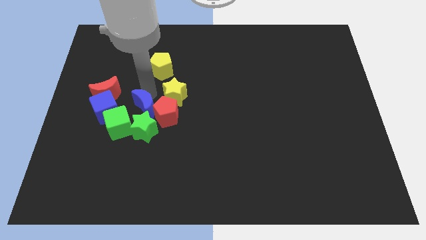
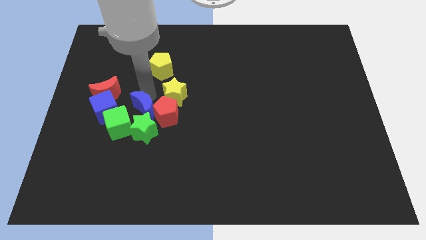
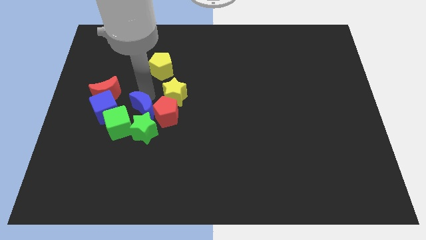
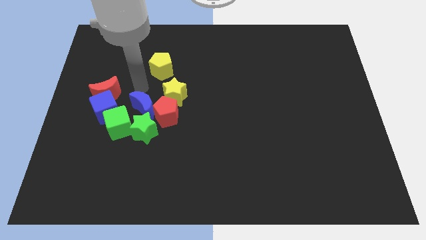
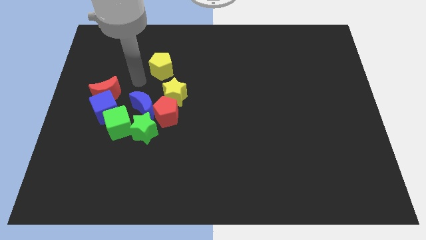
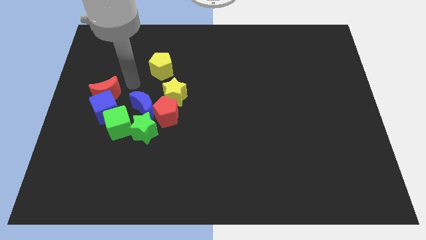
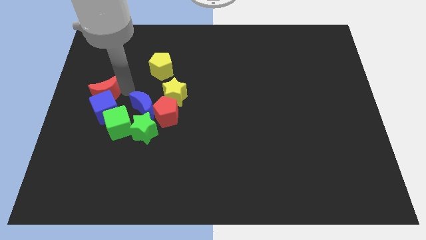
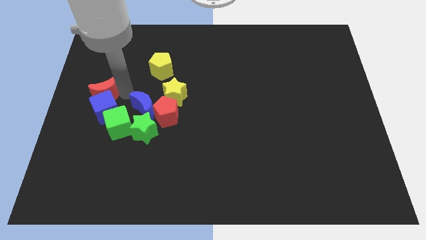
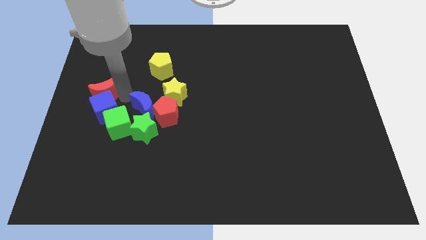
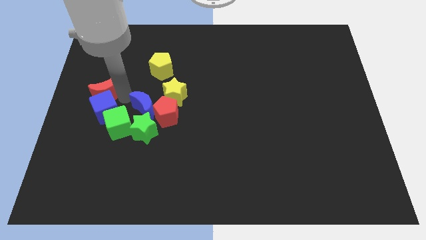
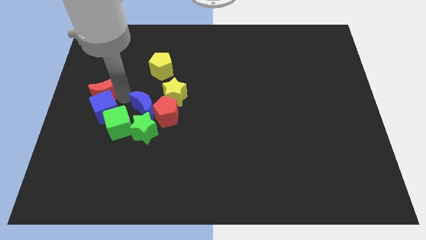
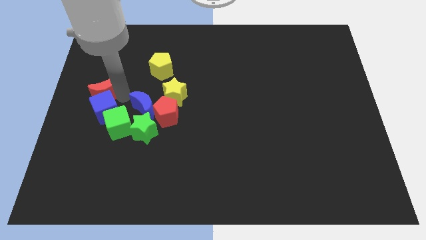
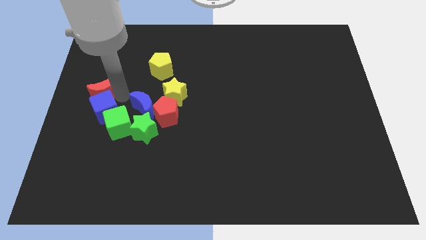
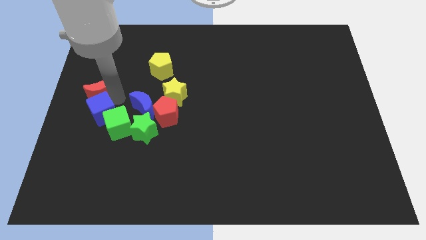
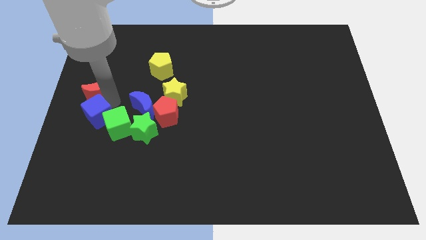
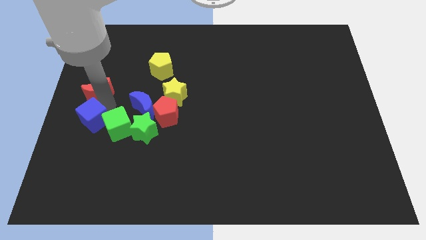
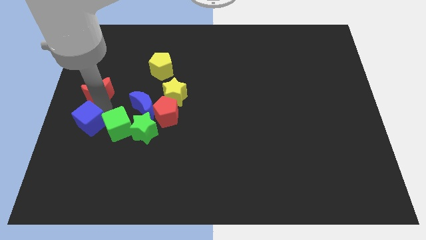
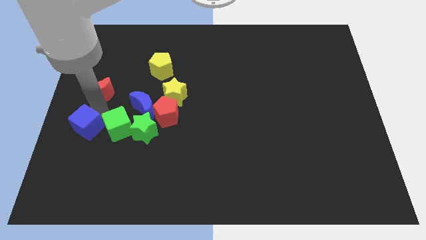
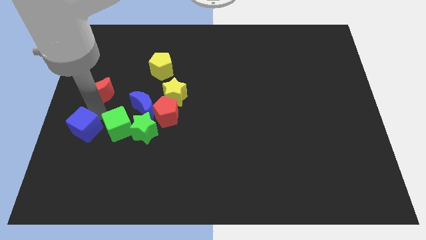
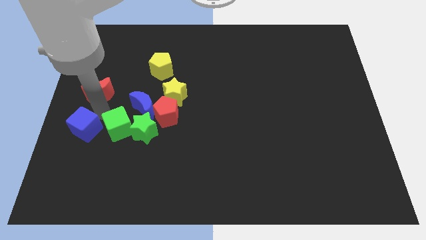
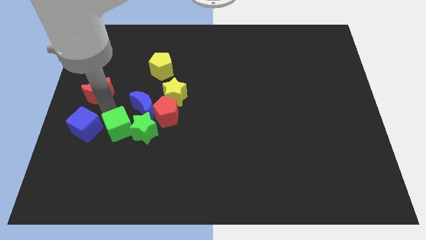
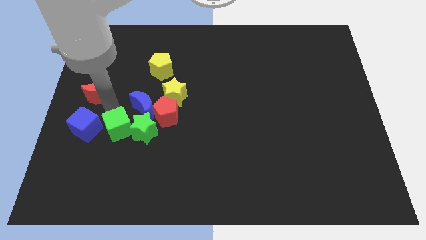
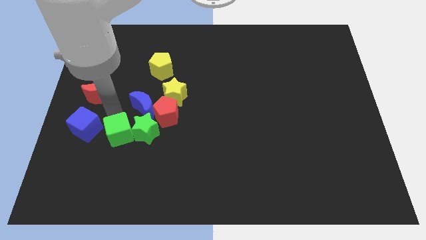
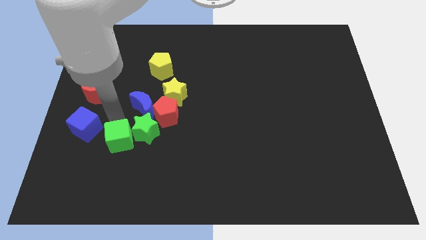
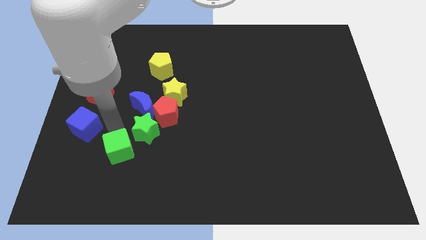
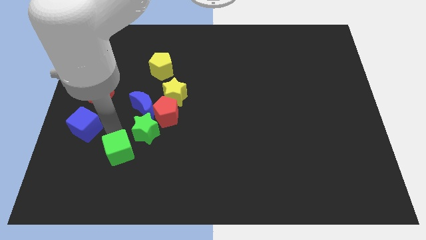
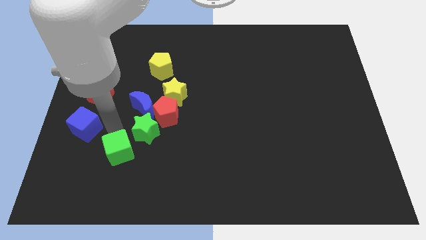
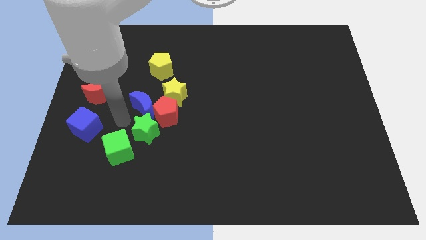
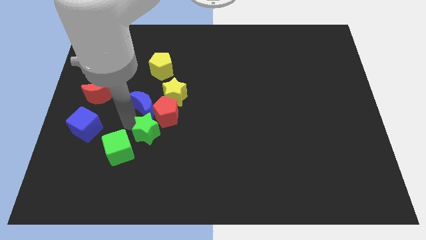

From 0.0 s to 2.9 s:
separate the blocks from each other

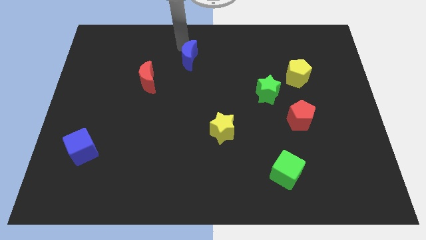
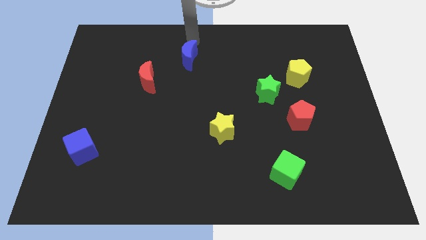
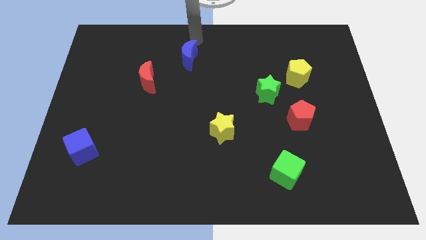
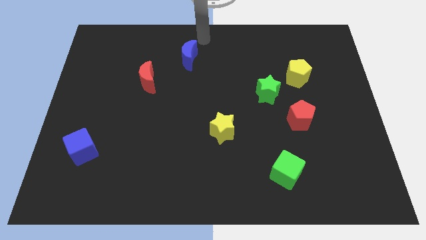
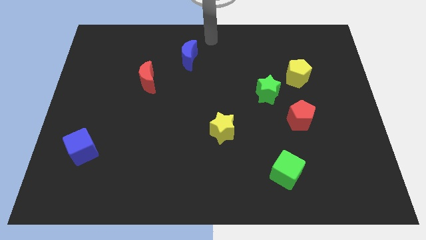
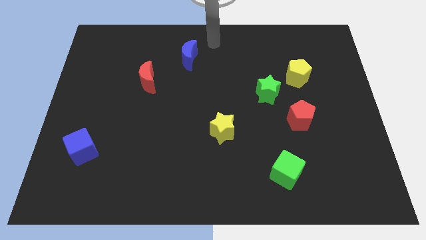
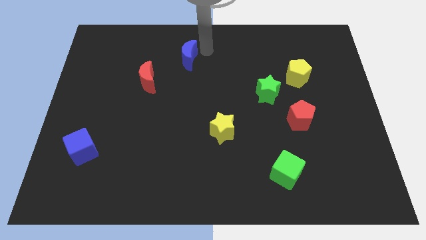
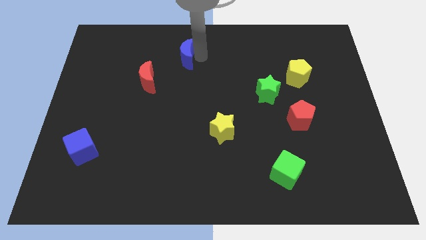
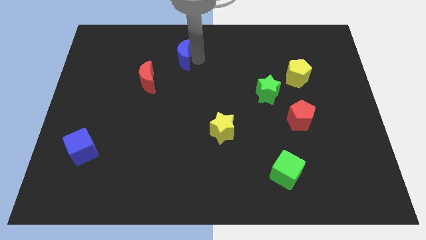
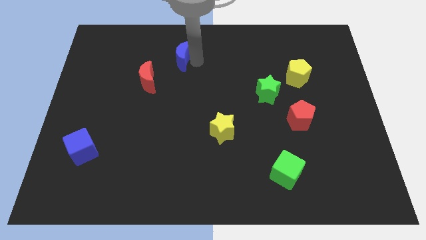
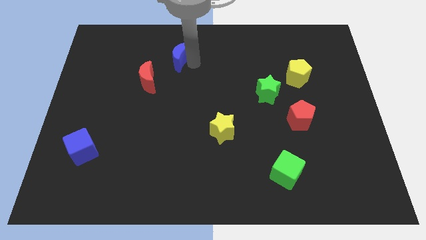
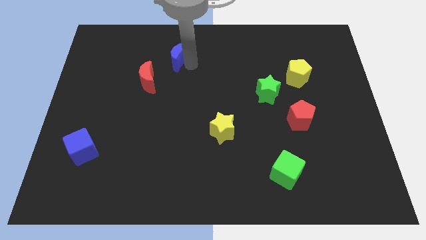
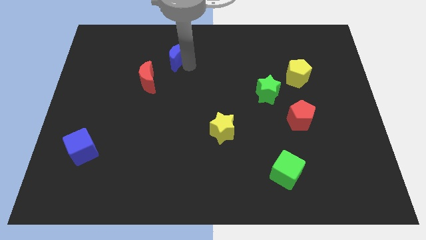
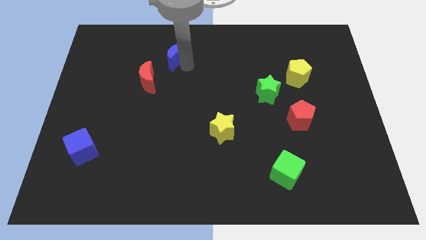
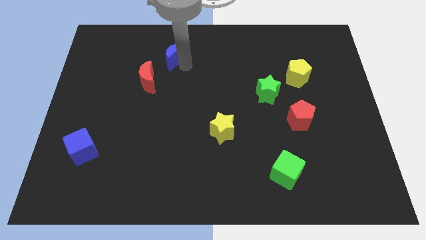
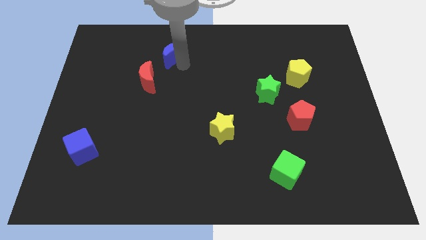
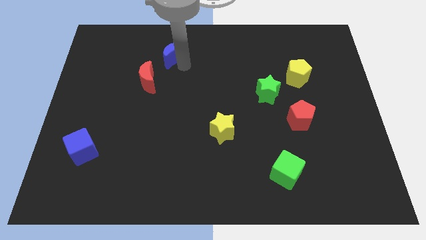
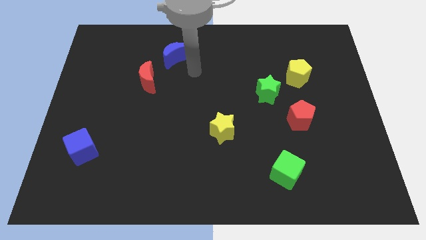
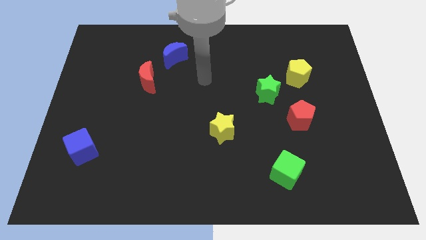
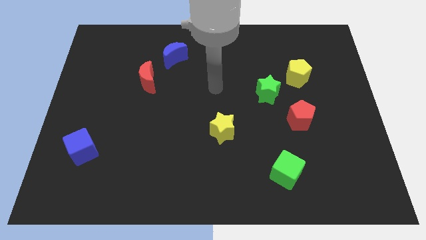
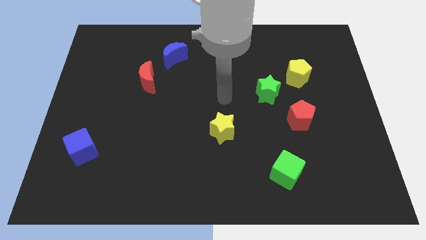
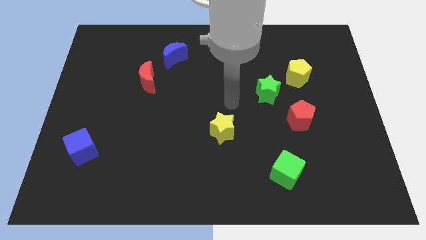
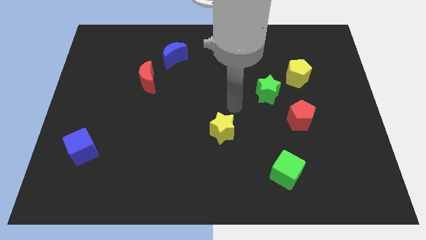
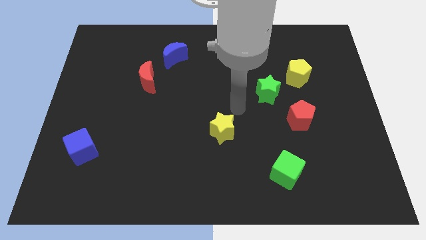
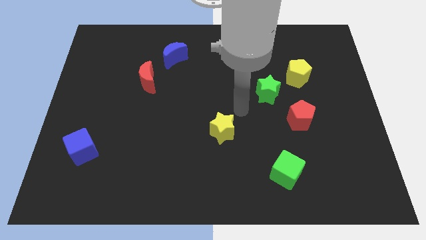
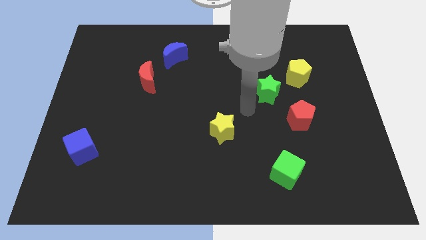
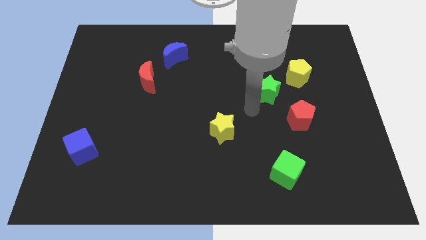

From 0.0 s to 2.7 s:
slide up the blue moon

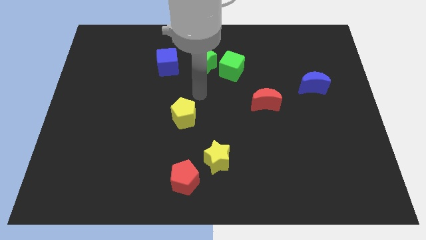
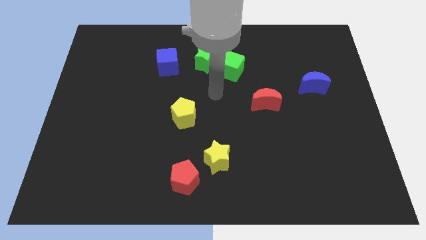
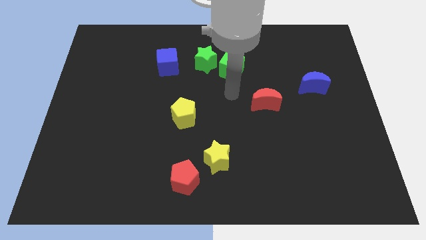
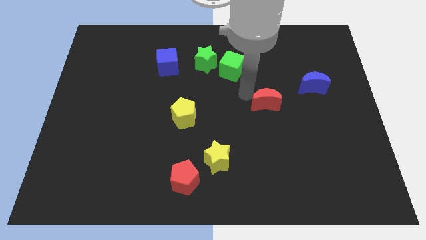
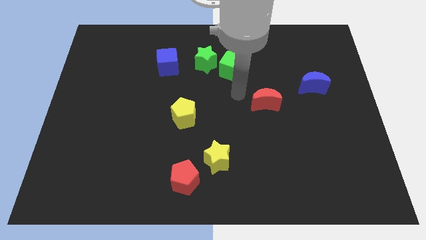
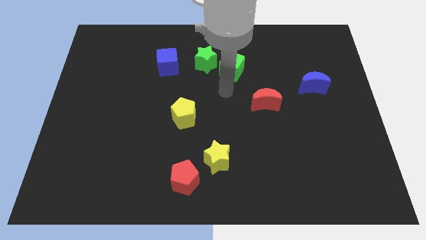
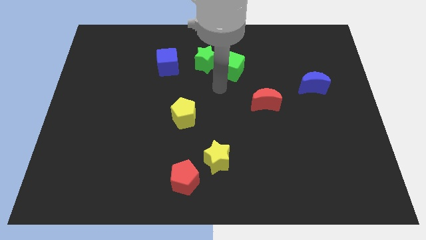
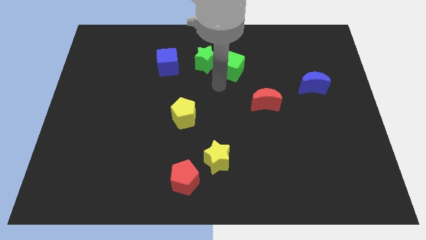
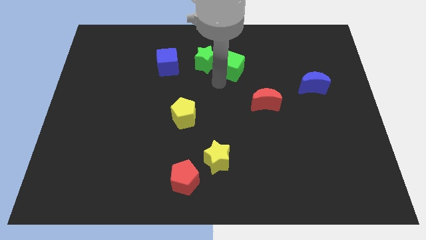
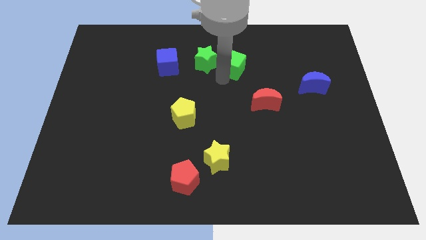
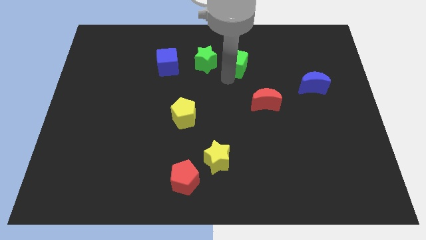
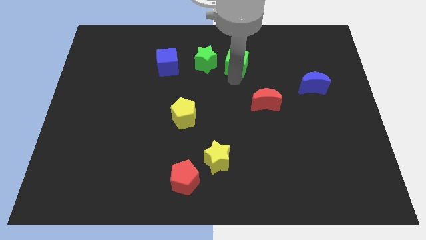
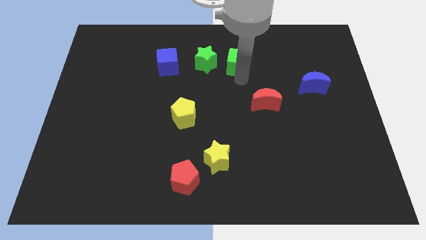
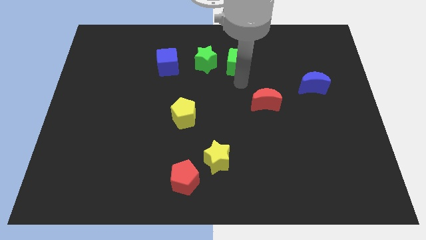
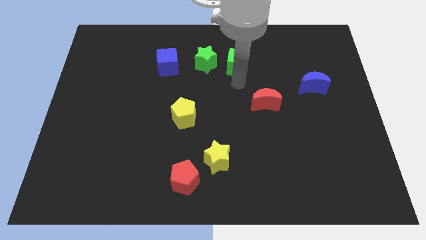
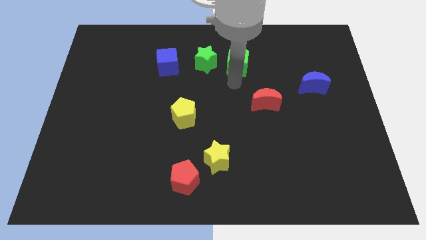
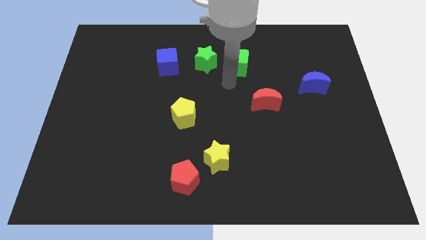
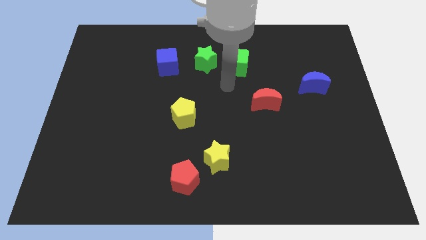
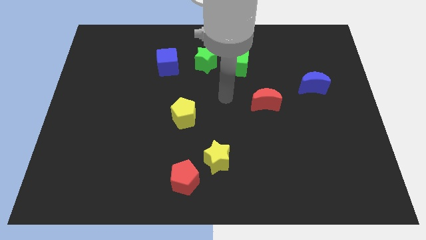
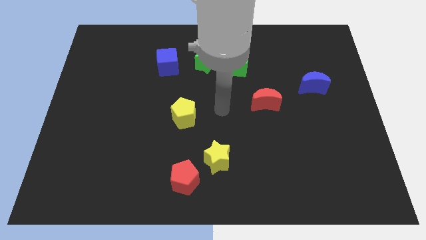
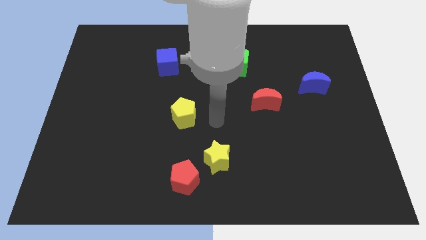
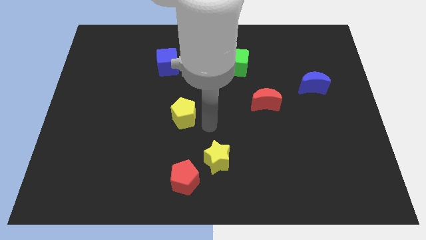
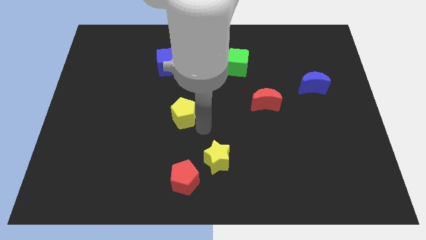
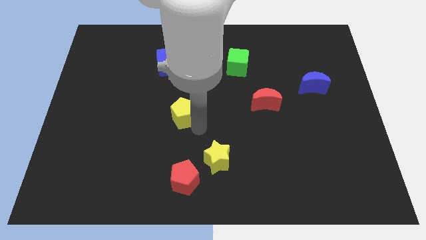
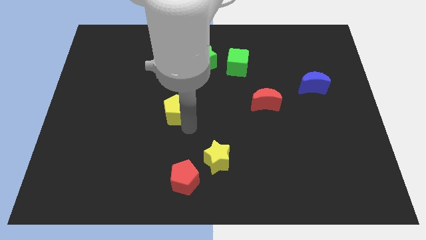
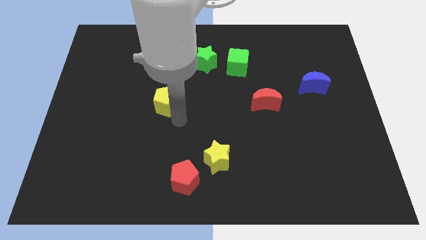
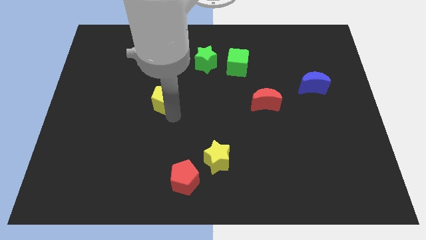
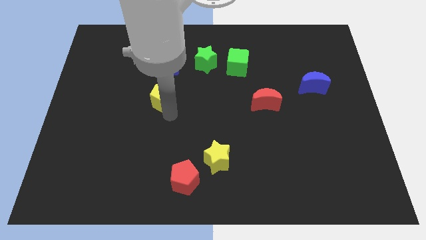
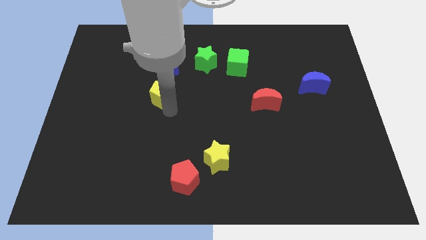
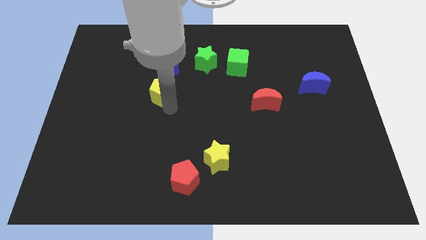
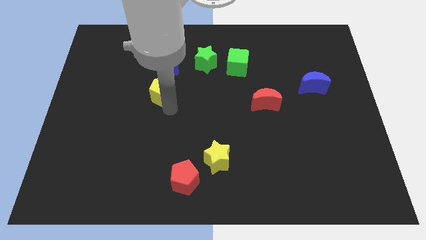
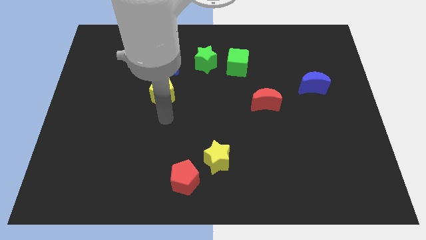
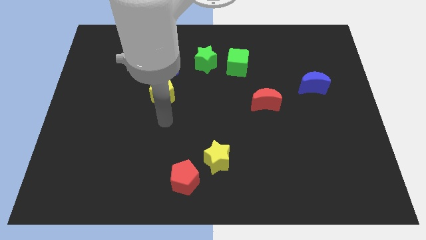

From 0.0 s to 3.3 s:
push green block to the right of green star

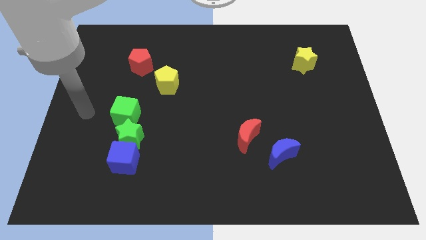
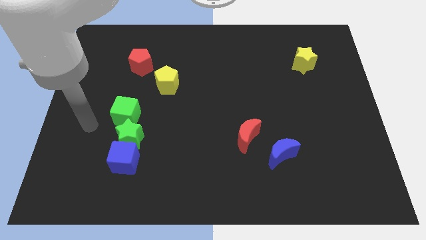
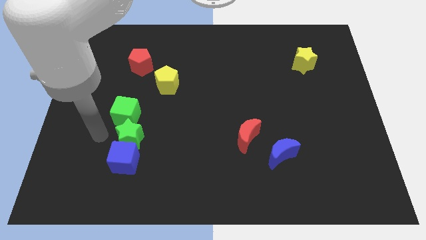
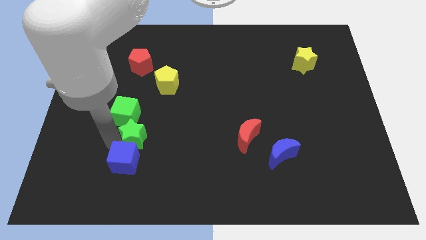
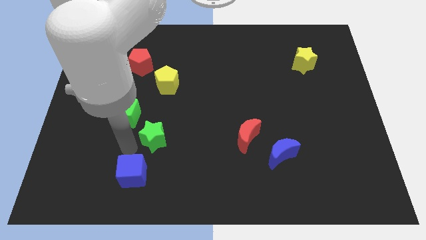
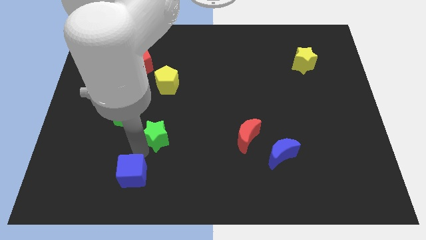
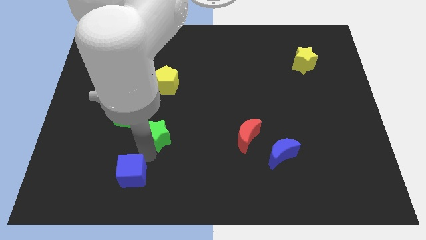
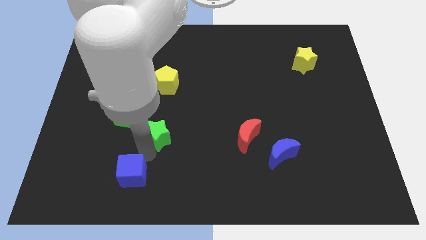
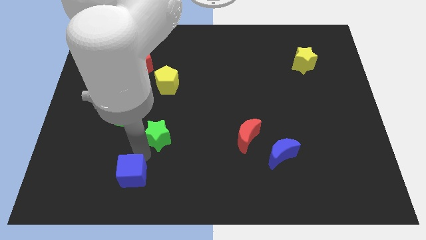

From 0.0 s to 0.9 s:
separate the blue cube from green star
